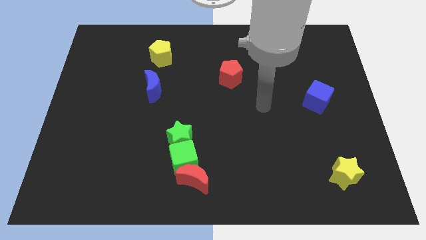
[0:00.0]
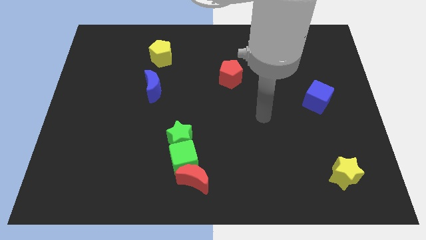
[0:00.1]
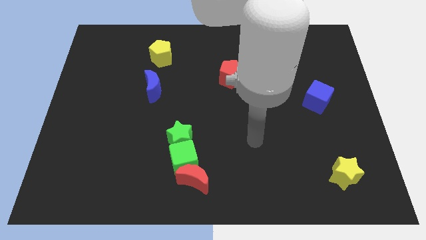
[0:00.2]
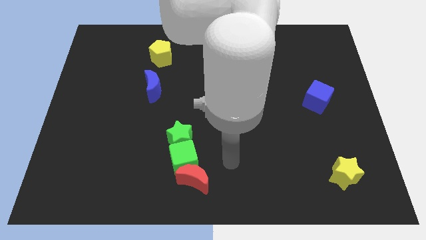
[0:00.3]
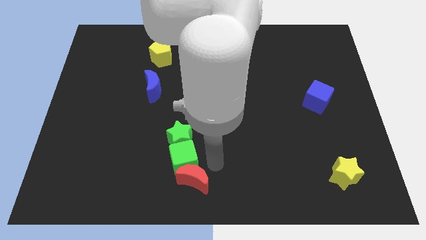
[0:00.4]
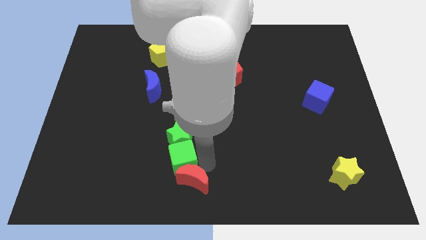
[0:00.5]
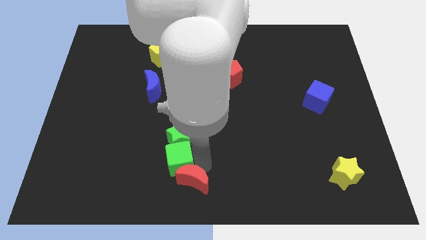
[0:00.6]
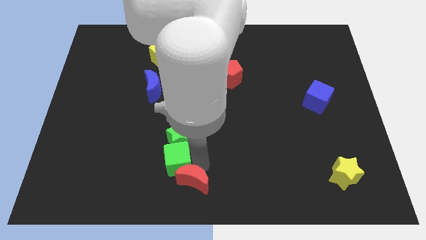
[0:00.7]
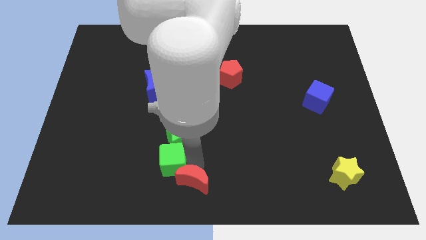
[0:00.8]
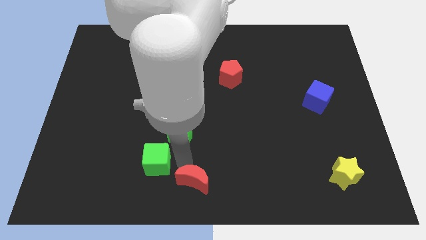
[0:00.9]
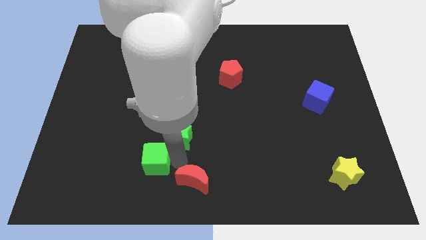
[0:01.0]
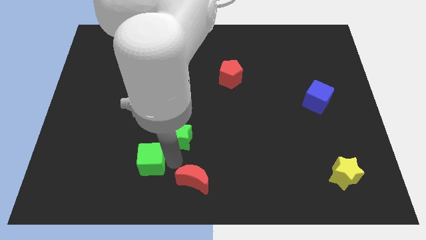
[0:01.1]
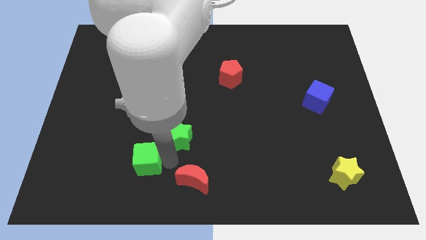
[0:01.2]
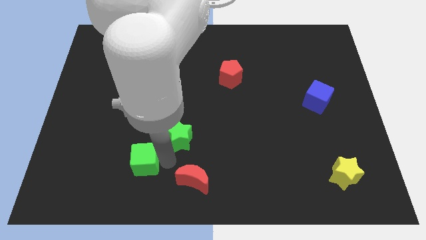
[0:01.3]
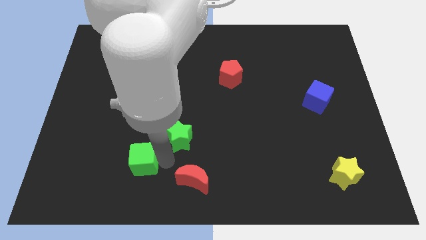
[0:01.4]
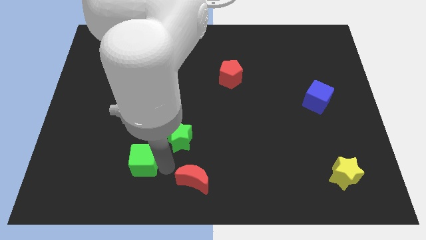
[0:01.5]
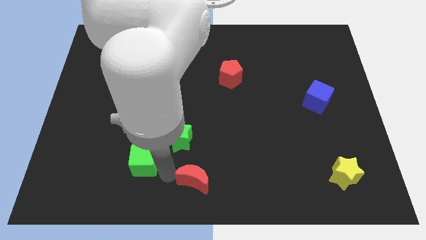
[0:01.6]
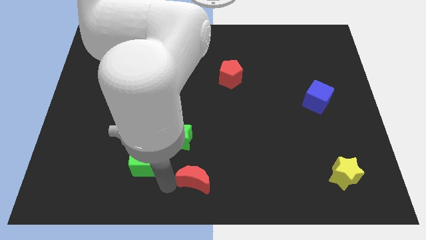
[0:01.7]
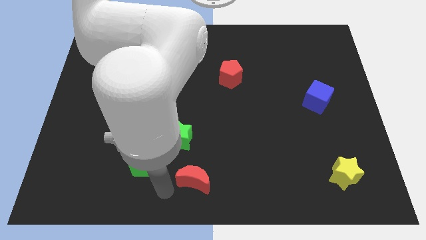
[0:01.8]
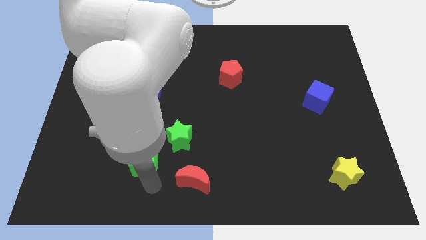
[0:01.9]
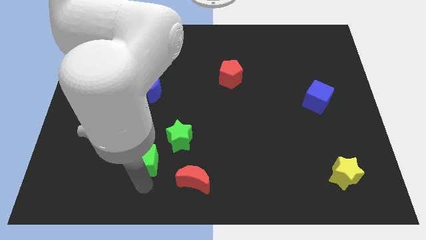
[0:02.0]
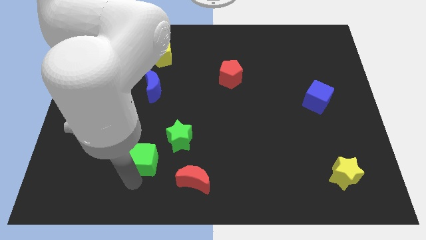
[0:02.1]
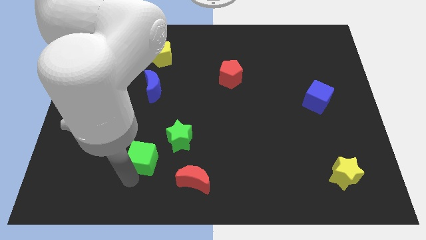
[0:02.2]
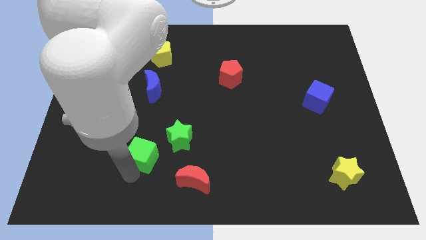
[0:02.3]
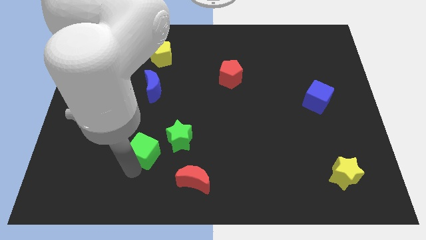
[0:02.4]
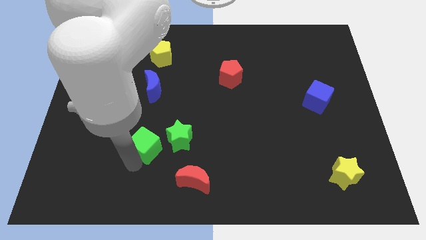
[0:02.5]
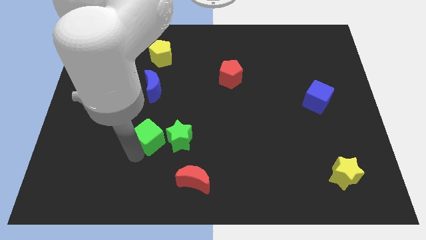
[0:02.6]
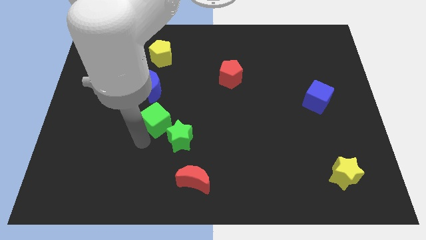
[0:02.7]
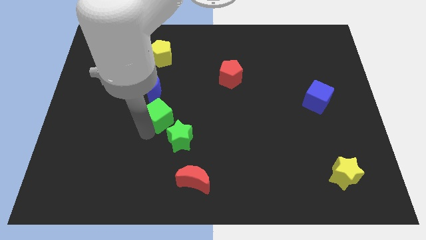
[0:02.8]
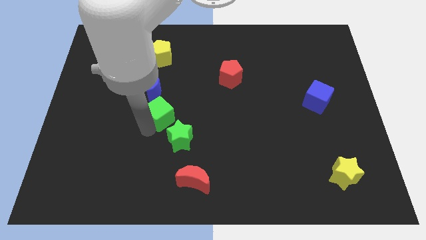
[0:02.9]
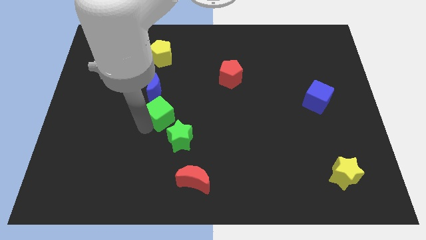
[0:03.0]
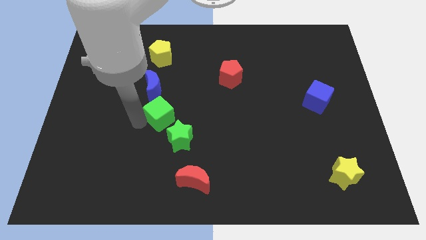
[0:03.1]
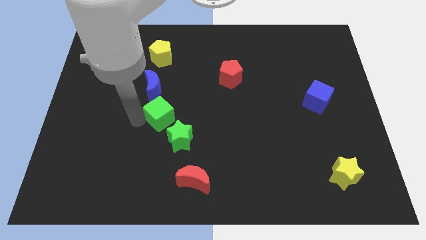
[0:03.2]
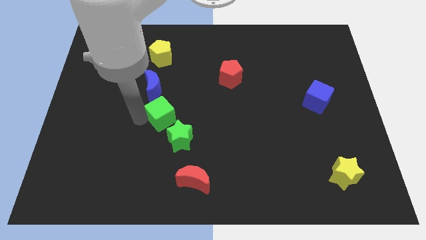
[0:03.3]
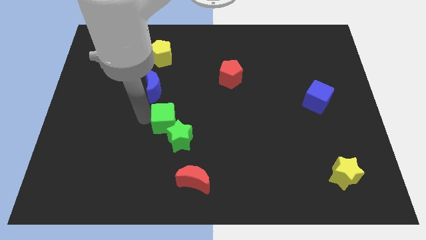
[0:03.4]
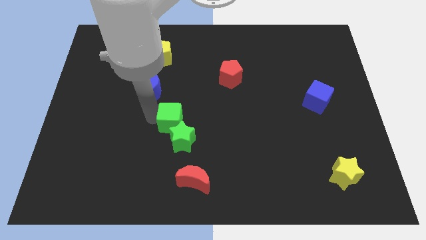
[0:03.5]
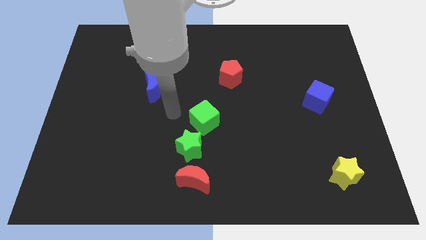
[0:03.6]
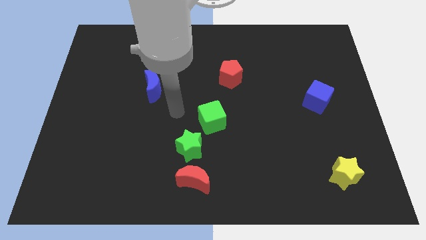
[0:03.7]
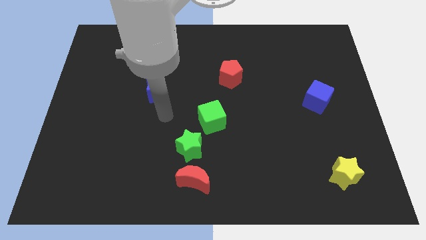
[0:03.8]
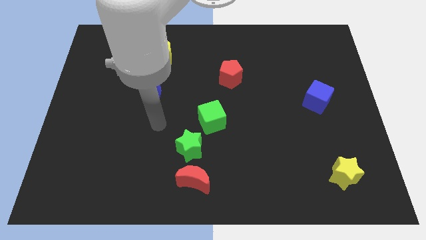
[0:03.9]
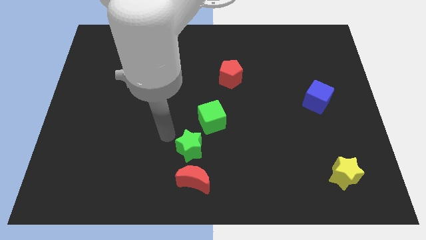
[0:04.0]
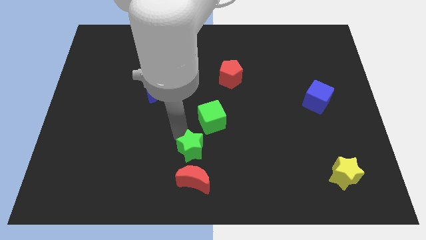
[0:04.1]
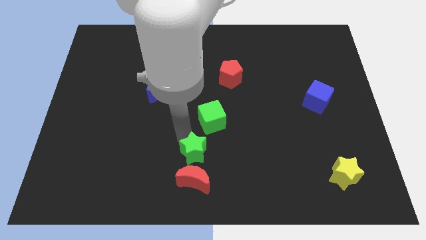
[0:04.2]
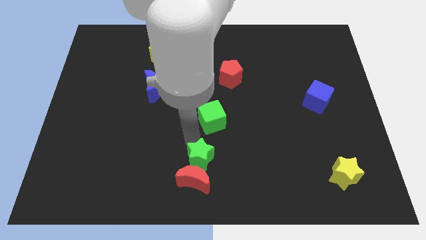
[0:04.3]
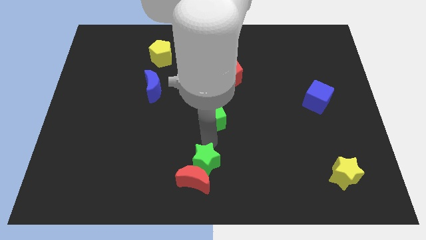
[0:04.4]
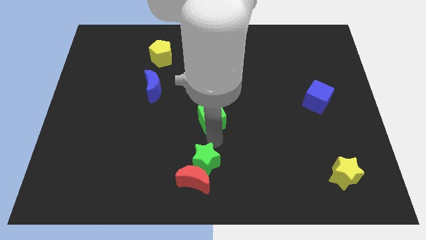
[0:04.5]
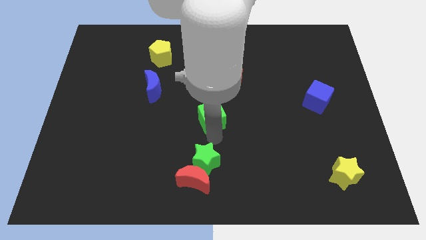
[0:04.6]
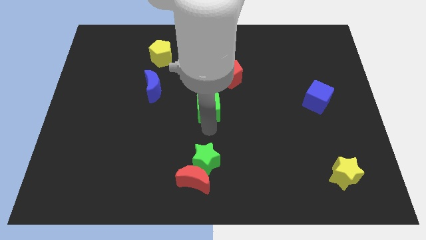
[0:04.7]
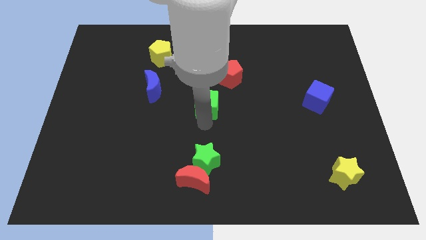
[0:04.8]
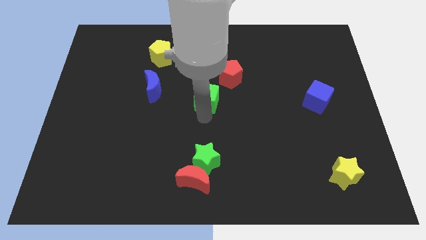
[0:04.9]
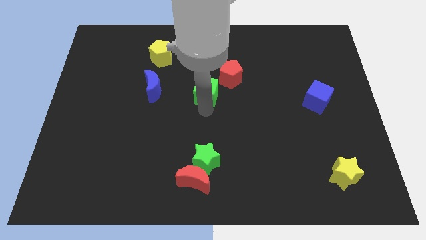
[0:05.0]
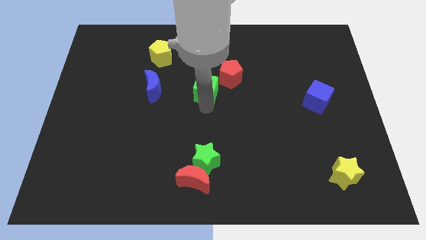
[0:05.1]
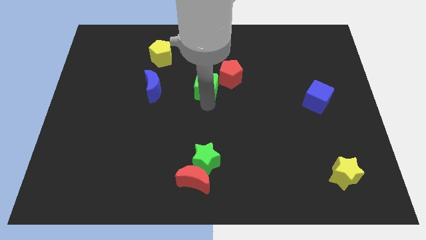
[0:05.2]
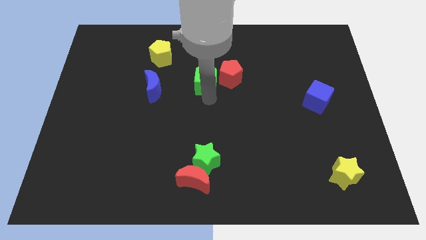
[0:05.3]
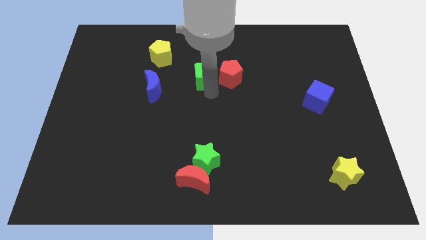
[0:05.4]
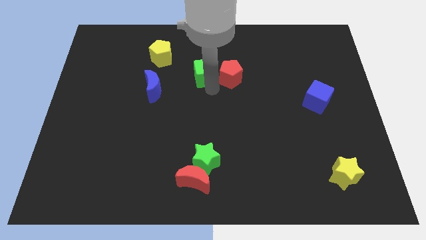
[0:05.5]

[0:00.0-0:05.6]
put the green cube to the red pentagon

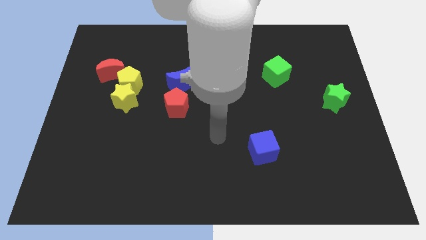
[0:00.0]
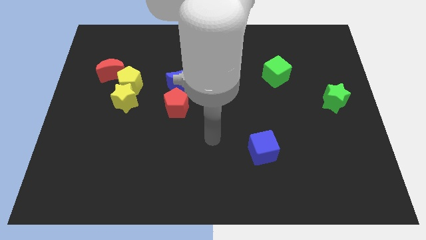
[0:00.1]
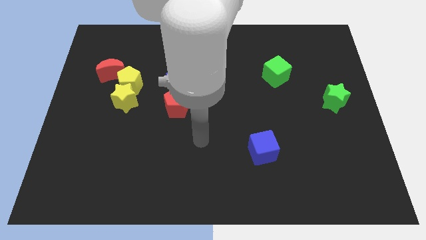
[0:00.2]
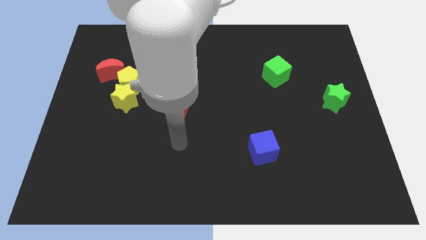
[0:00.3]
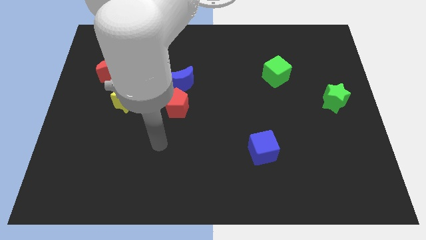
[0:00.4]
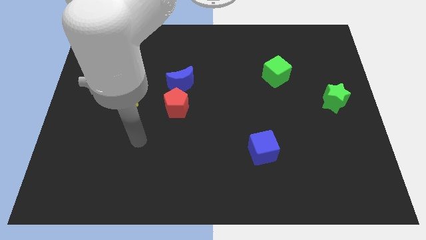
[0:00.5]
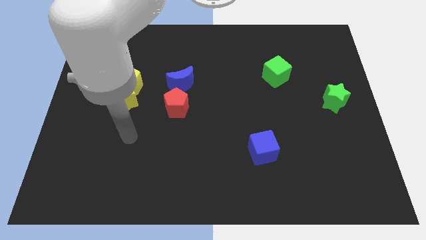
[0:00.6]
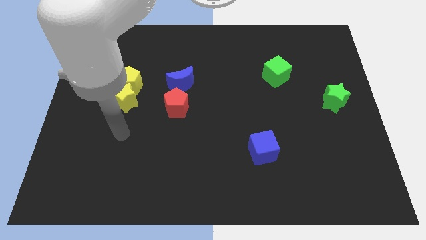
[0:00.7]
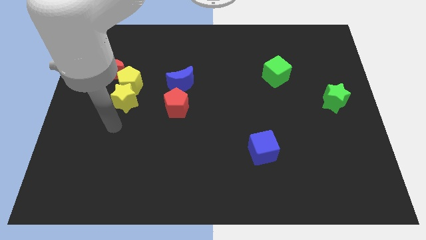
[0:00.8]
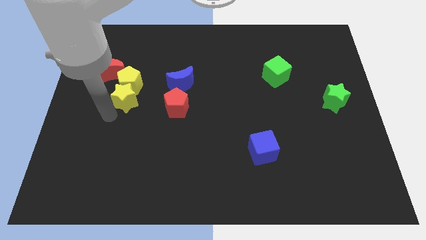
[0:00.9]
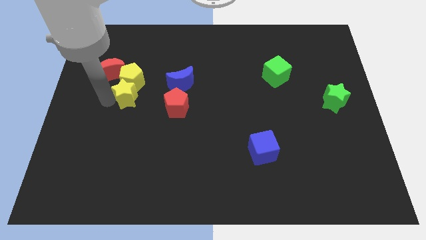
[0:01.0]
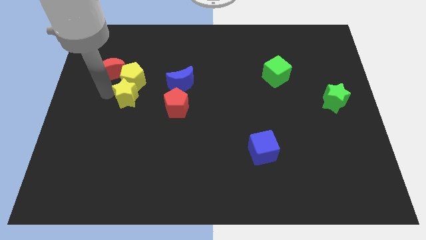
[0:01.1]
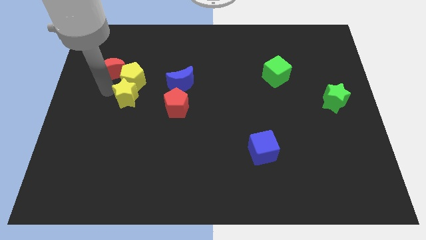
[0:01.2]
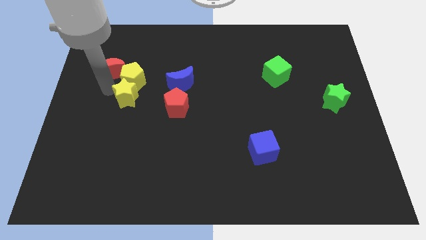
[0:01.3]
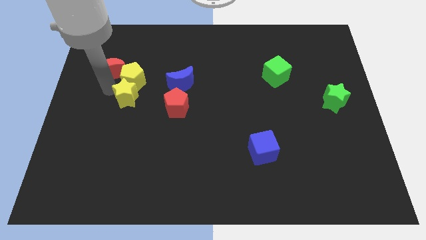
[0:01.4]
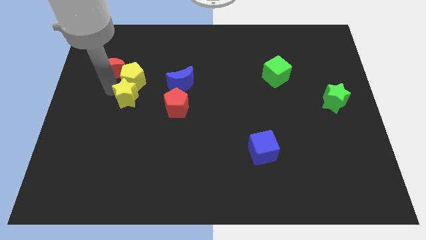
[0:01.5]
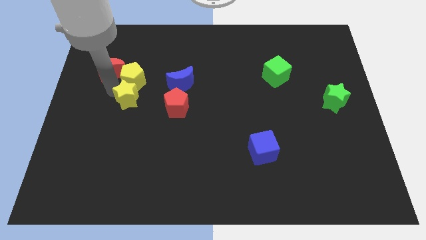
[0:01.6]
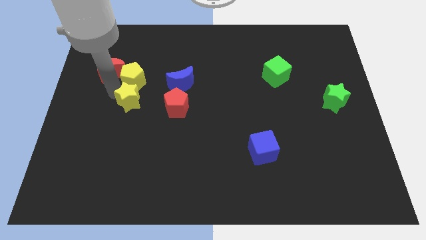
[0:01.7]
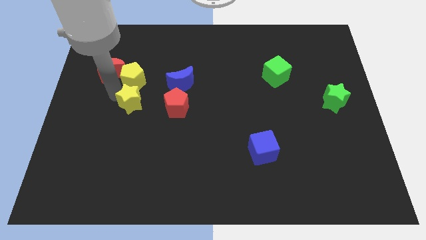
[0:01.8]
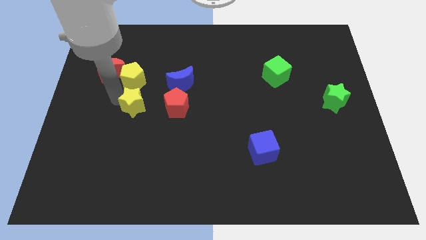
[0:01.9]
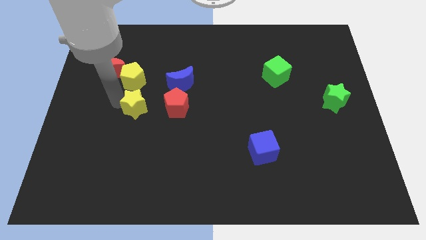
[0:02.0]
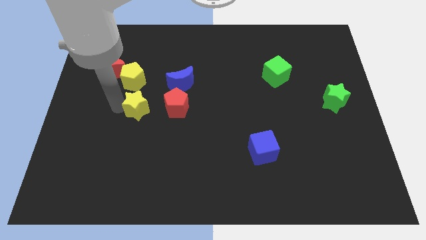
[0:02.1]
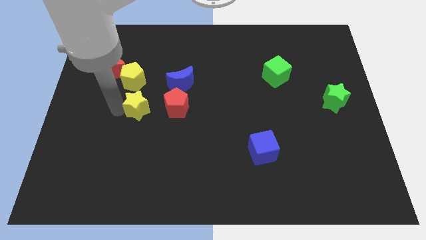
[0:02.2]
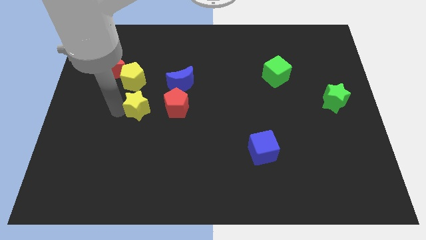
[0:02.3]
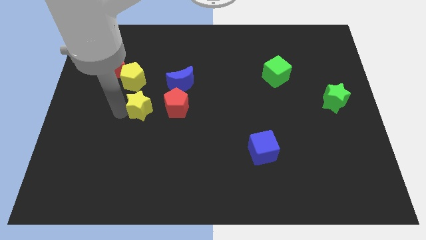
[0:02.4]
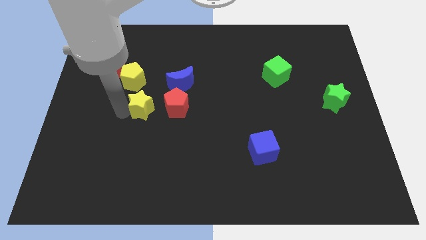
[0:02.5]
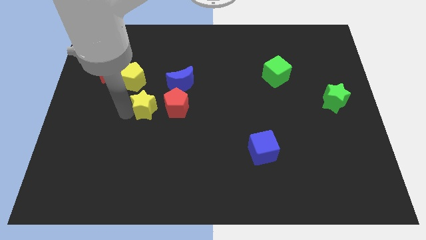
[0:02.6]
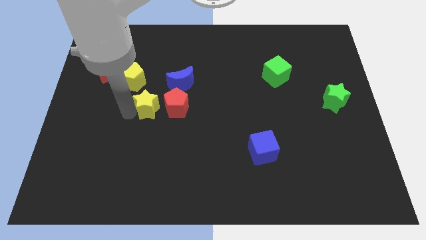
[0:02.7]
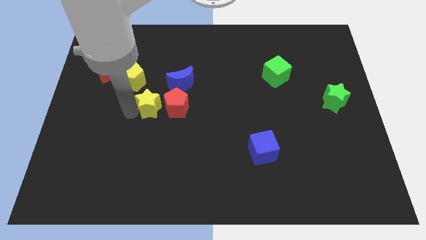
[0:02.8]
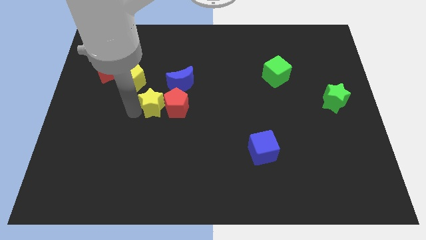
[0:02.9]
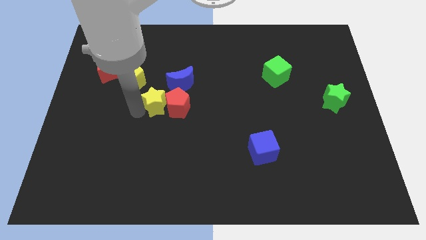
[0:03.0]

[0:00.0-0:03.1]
slide the yellow star next to the red pentagon
